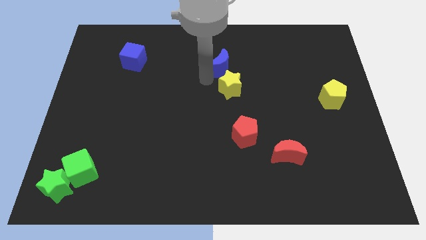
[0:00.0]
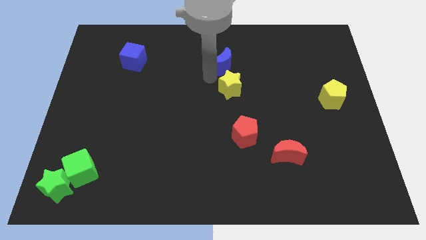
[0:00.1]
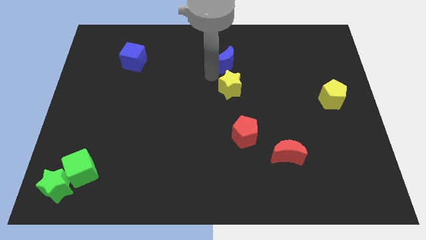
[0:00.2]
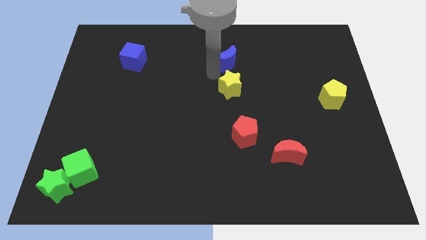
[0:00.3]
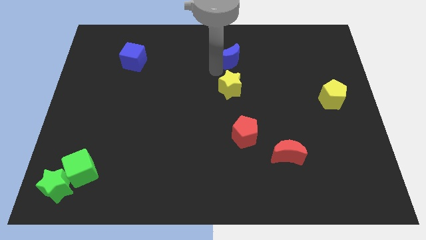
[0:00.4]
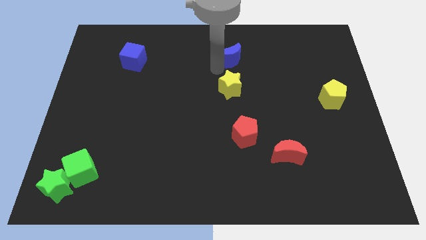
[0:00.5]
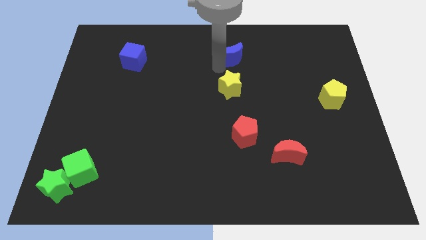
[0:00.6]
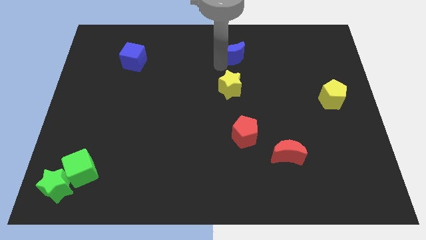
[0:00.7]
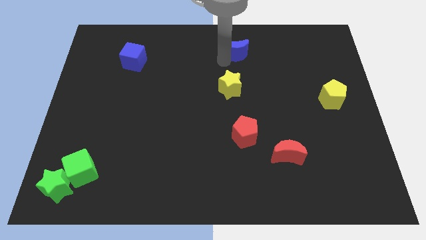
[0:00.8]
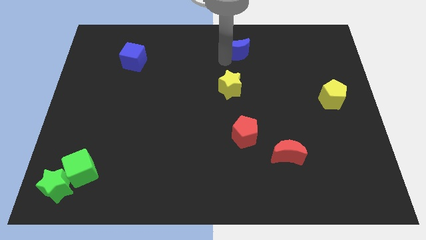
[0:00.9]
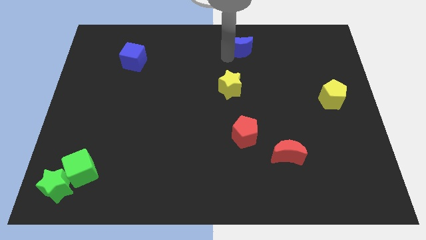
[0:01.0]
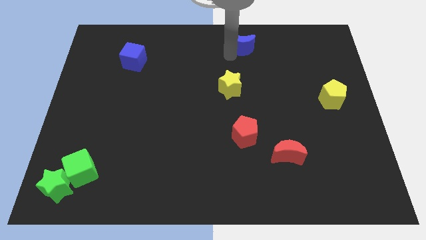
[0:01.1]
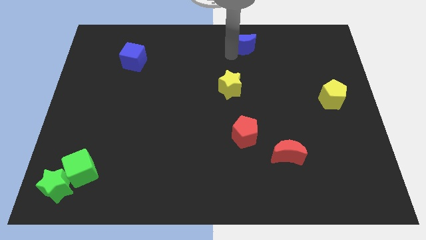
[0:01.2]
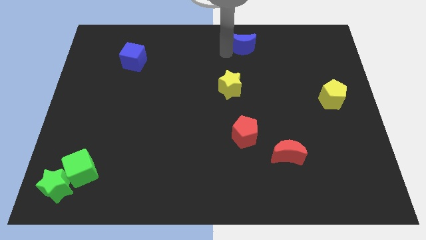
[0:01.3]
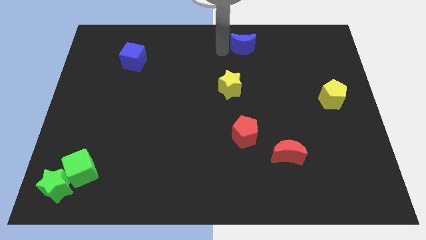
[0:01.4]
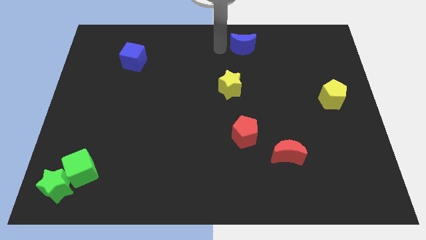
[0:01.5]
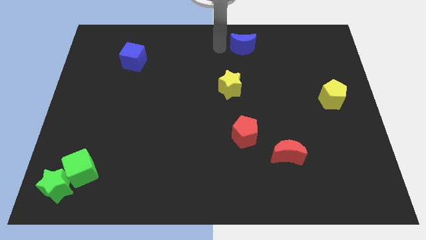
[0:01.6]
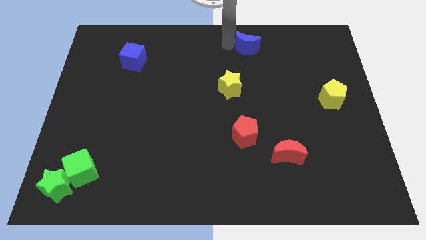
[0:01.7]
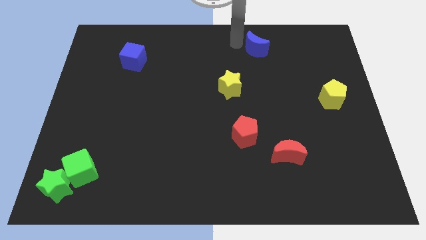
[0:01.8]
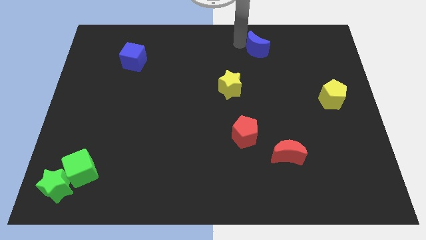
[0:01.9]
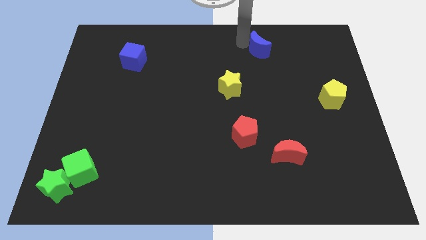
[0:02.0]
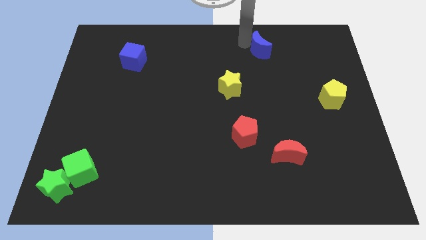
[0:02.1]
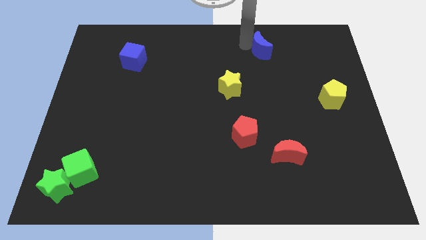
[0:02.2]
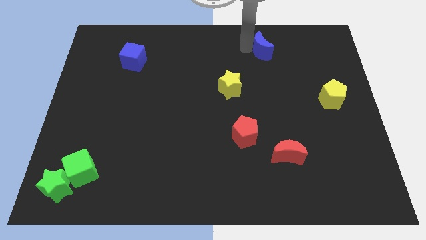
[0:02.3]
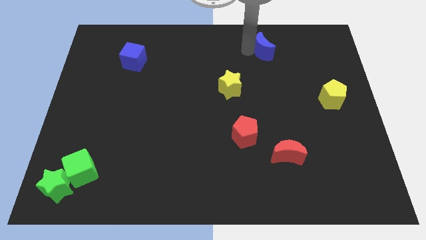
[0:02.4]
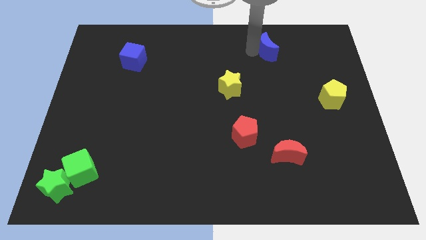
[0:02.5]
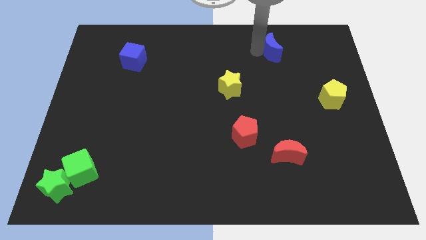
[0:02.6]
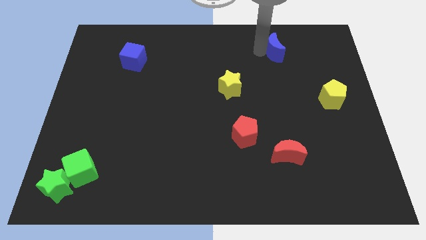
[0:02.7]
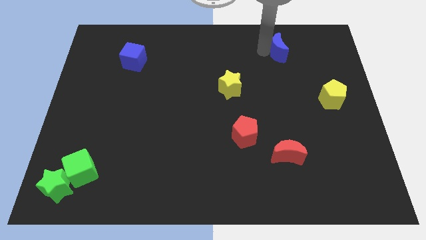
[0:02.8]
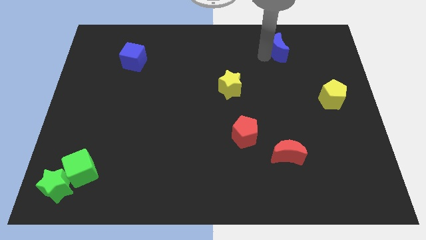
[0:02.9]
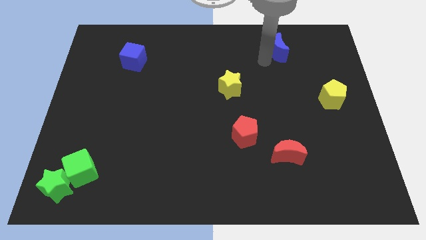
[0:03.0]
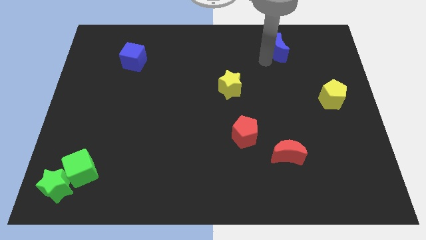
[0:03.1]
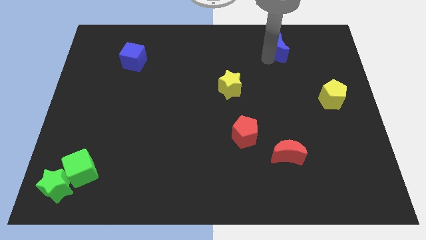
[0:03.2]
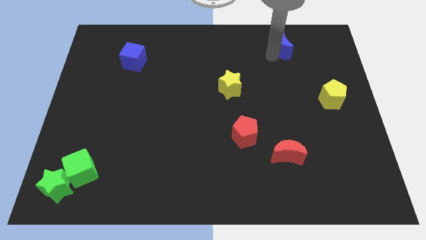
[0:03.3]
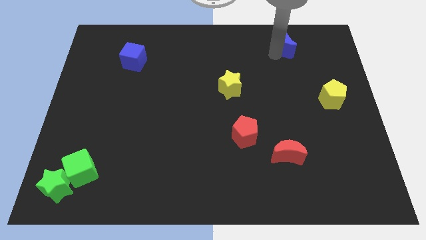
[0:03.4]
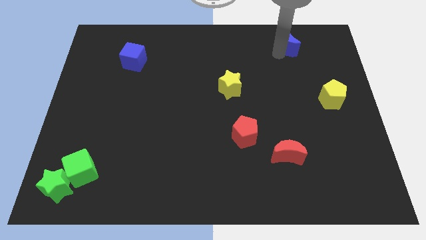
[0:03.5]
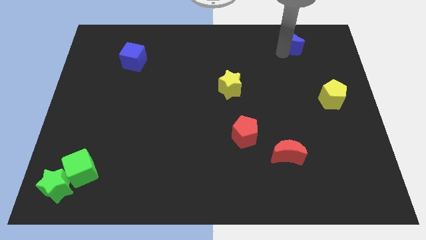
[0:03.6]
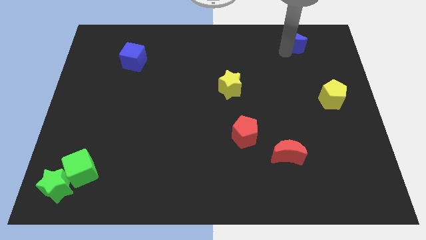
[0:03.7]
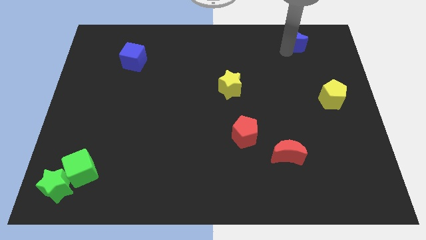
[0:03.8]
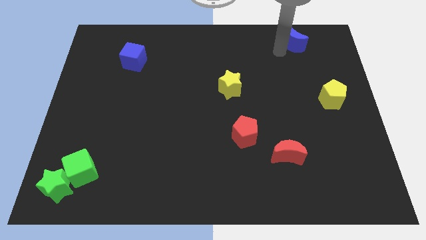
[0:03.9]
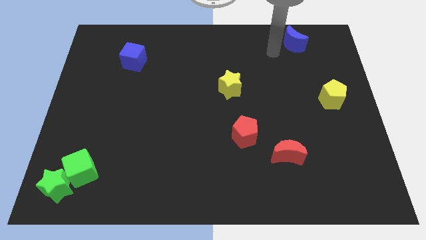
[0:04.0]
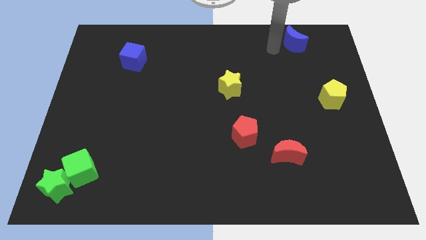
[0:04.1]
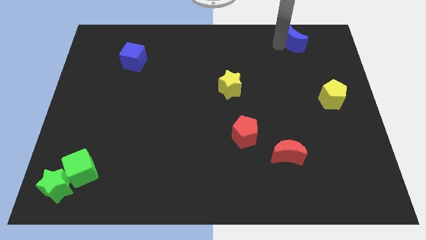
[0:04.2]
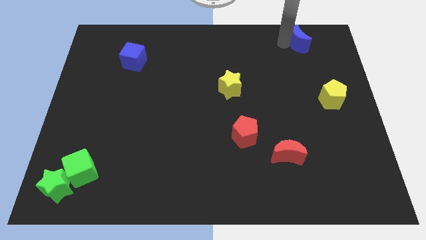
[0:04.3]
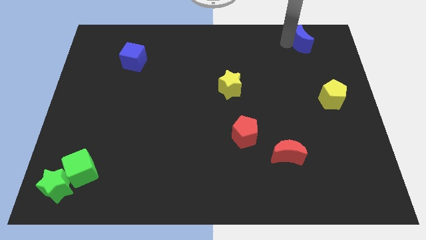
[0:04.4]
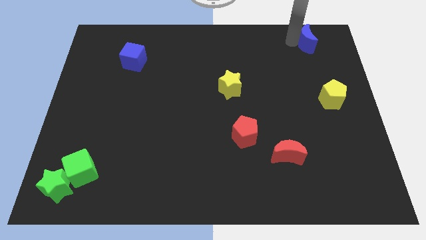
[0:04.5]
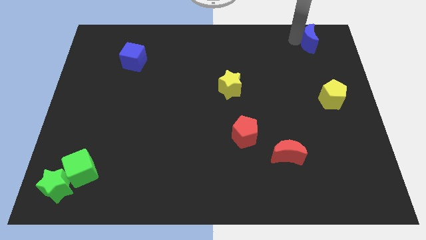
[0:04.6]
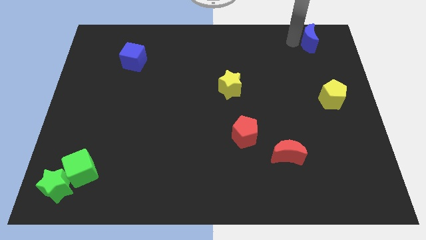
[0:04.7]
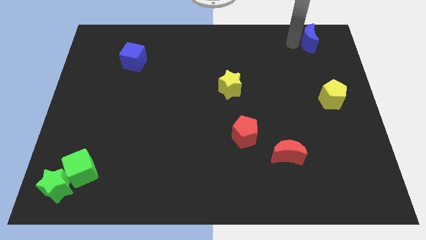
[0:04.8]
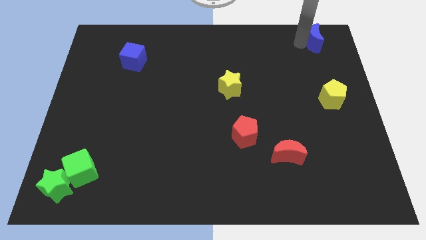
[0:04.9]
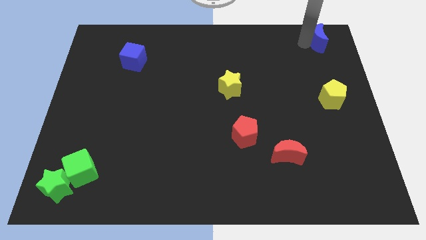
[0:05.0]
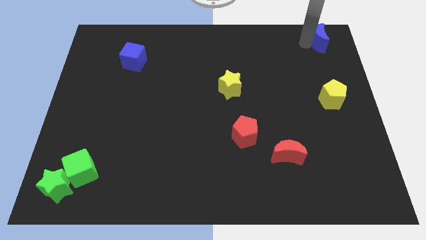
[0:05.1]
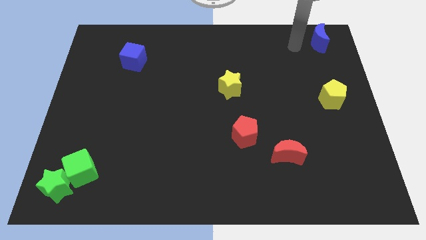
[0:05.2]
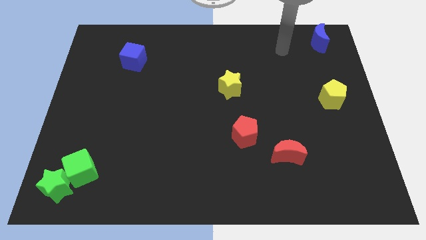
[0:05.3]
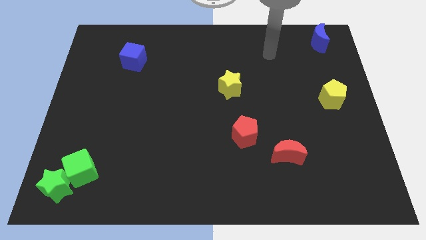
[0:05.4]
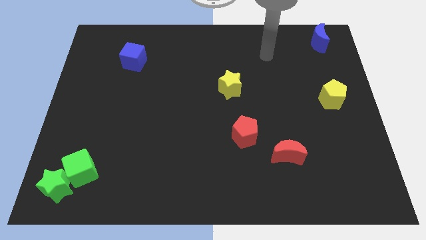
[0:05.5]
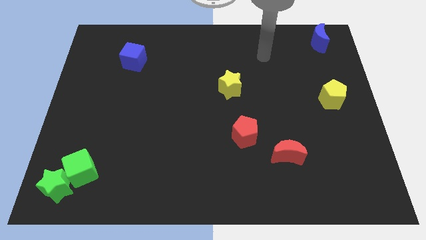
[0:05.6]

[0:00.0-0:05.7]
push the blue crescent to the top right corner of the board

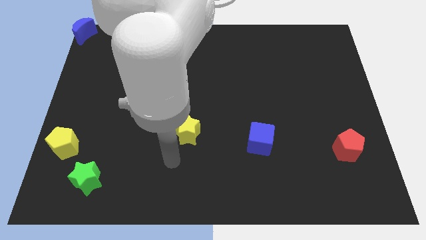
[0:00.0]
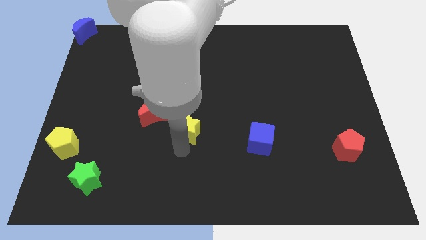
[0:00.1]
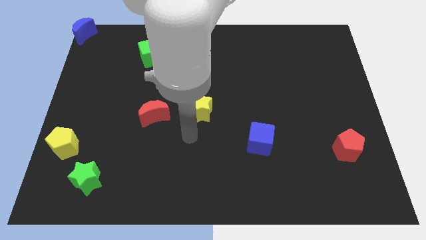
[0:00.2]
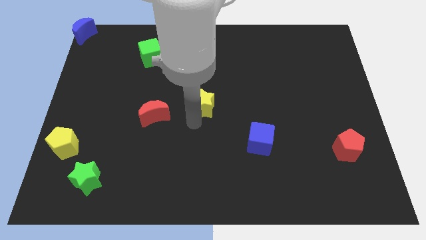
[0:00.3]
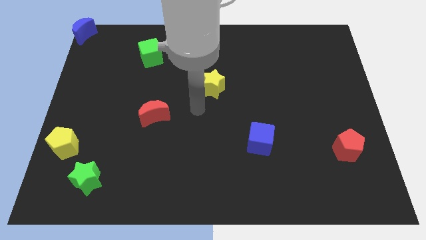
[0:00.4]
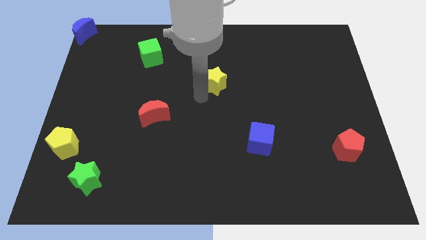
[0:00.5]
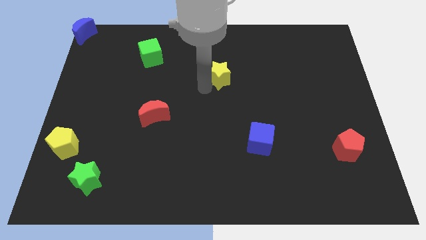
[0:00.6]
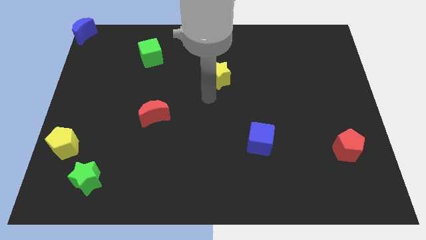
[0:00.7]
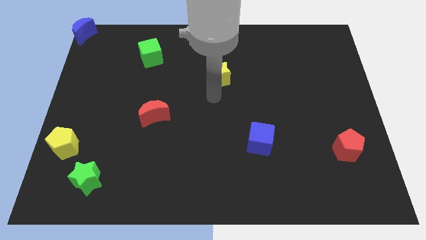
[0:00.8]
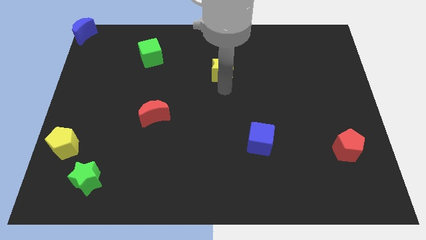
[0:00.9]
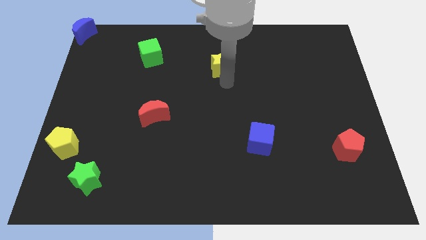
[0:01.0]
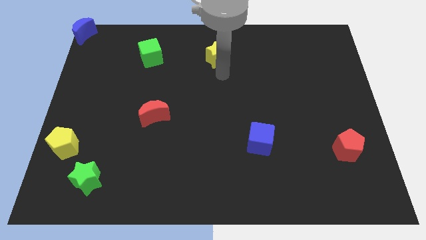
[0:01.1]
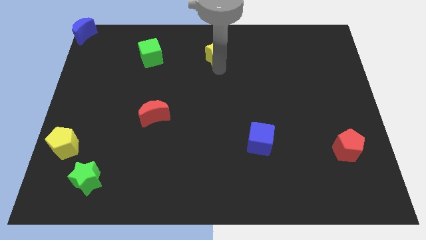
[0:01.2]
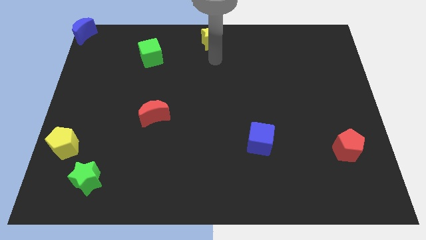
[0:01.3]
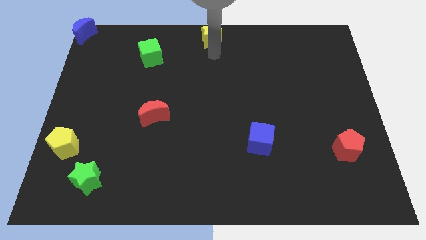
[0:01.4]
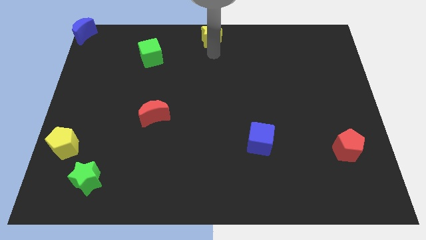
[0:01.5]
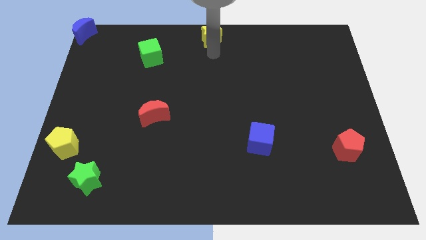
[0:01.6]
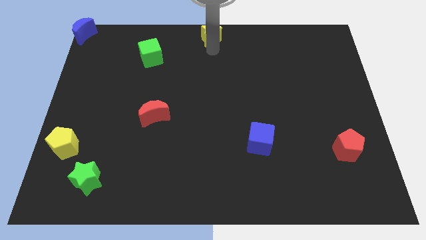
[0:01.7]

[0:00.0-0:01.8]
place the yellow star at the top center of the board

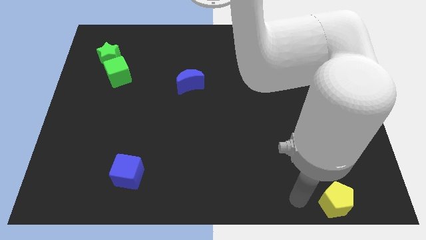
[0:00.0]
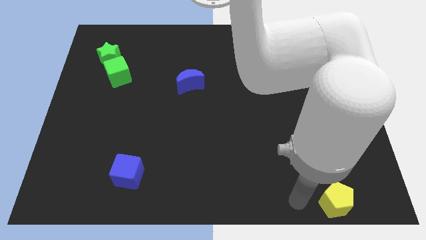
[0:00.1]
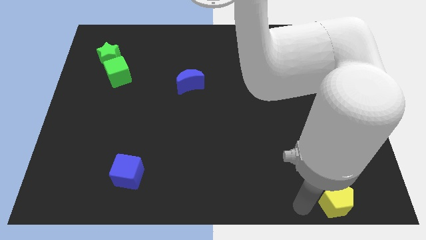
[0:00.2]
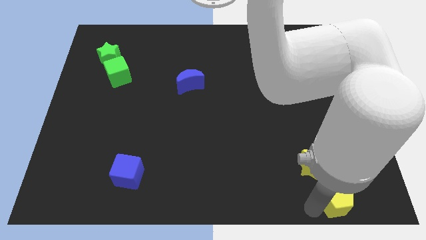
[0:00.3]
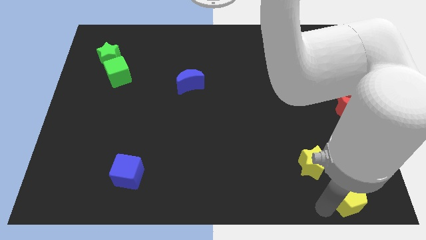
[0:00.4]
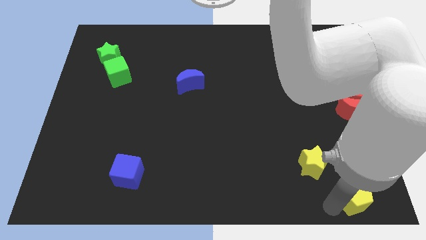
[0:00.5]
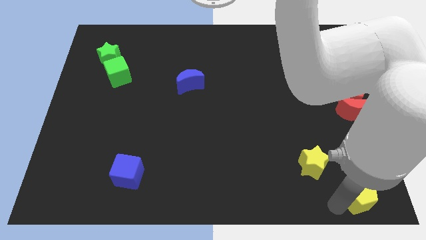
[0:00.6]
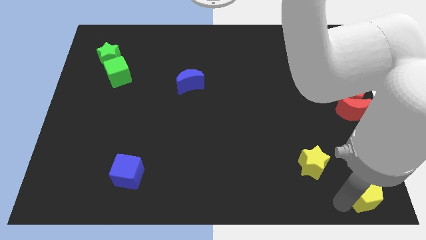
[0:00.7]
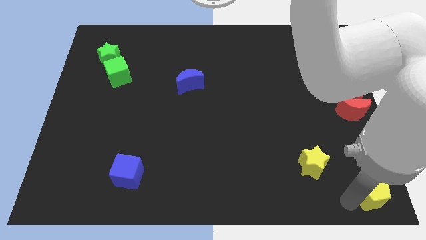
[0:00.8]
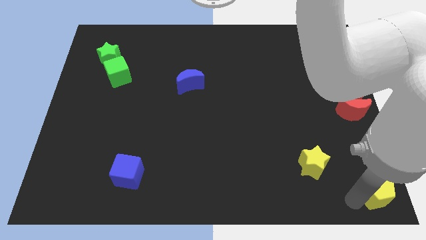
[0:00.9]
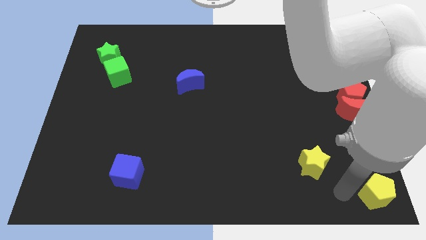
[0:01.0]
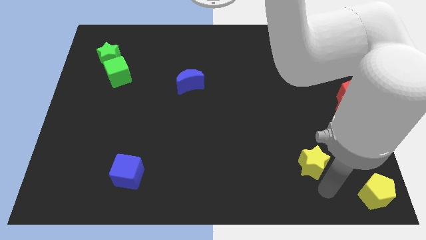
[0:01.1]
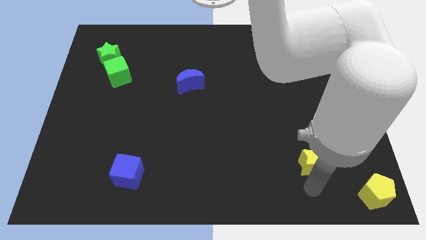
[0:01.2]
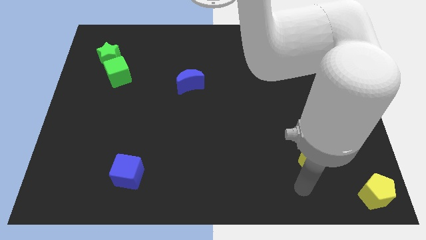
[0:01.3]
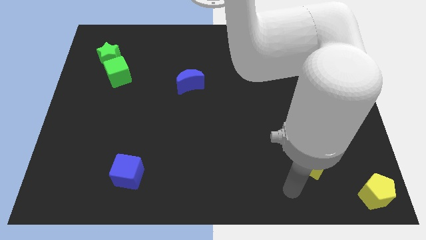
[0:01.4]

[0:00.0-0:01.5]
move the yellow pentagon towards the bottom right corner of the board

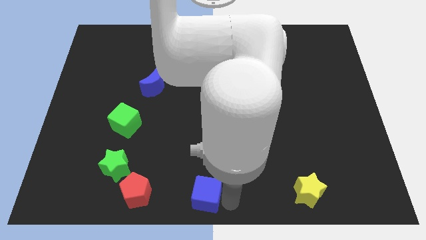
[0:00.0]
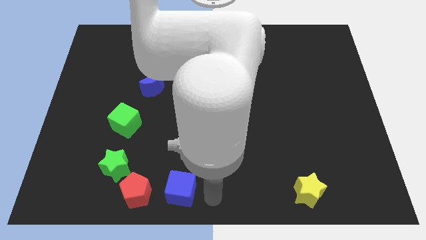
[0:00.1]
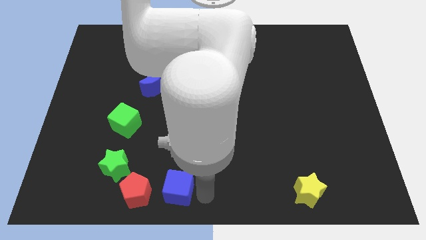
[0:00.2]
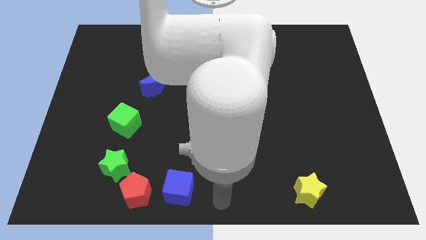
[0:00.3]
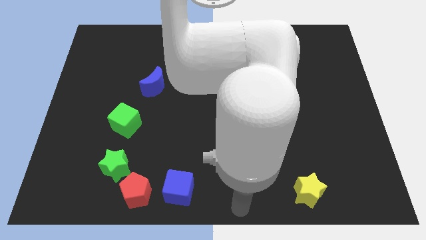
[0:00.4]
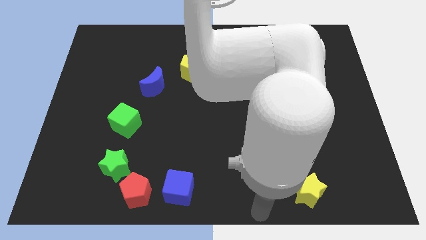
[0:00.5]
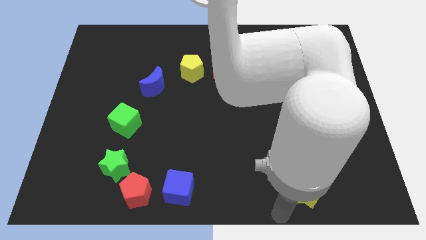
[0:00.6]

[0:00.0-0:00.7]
drag the blue cube to the left
